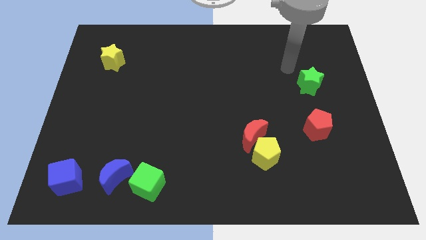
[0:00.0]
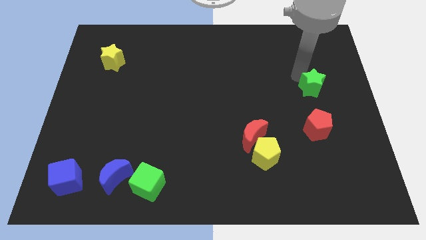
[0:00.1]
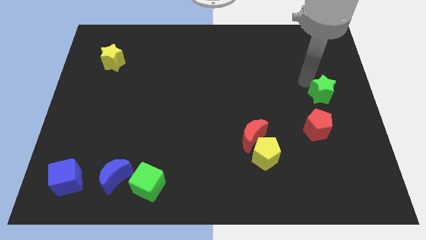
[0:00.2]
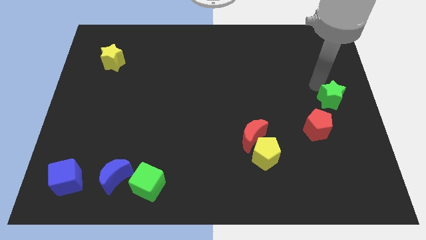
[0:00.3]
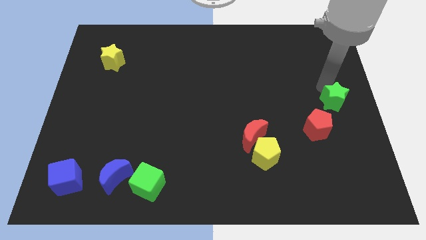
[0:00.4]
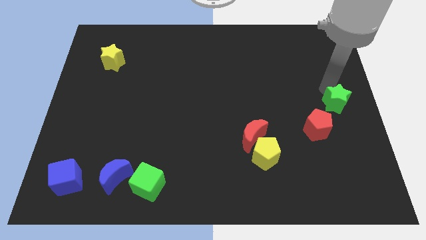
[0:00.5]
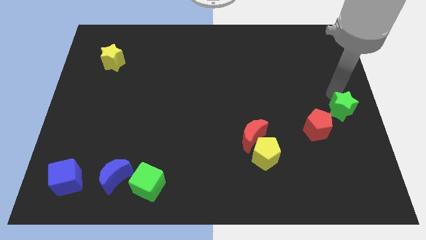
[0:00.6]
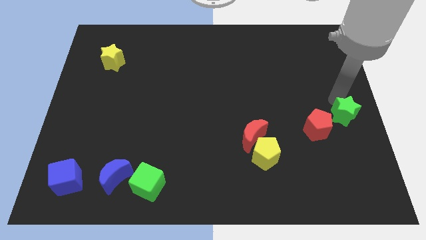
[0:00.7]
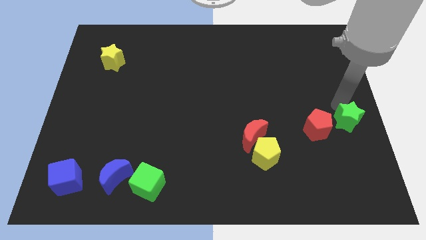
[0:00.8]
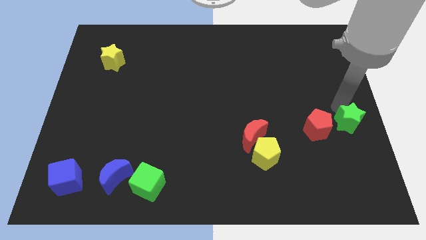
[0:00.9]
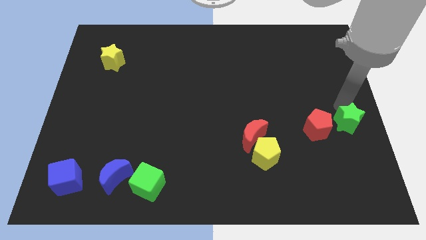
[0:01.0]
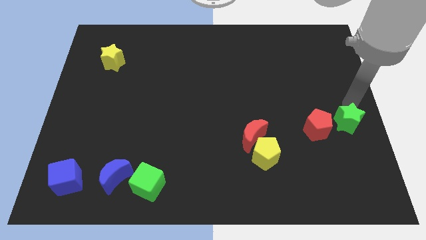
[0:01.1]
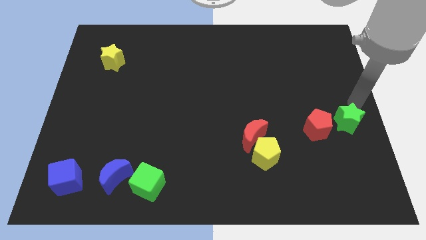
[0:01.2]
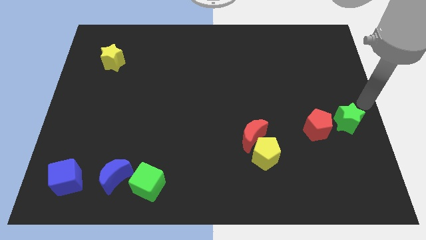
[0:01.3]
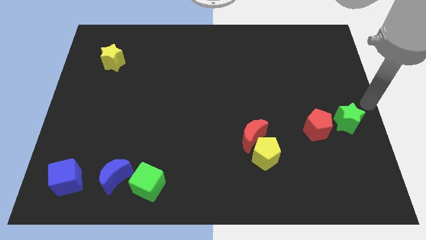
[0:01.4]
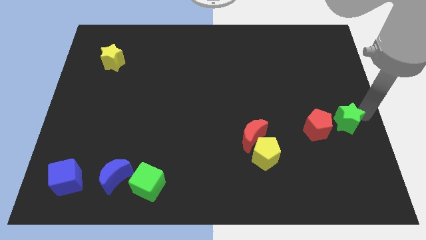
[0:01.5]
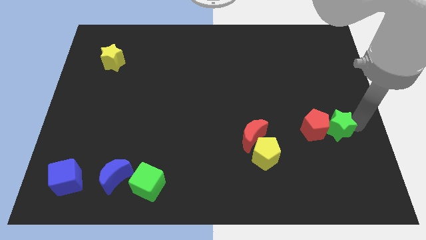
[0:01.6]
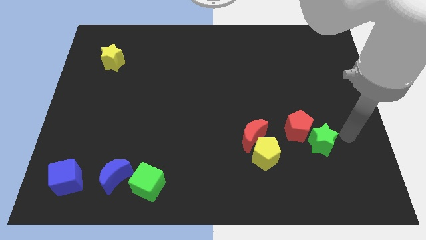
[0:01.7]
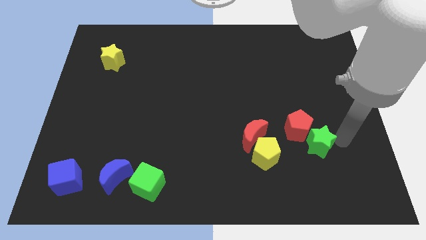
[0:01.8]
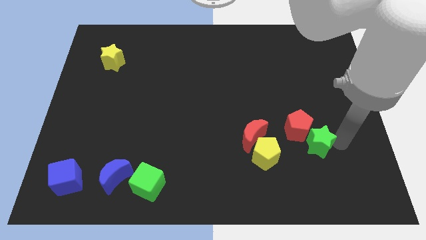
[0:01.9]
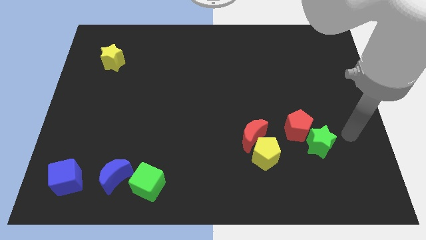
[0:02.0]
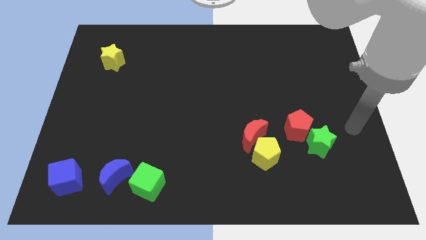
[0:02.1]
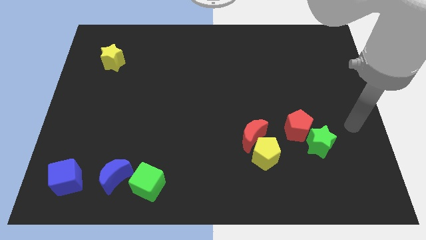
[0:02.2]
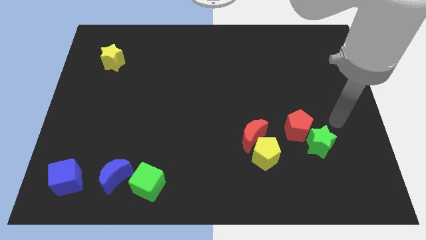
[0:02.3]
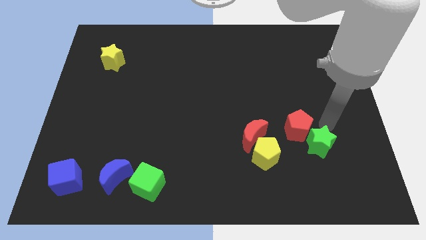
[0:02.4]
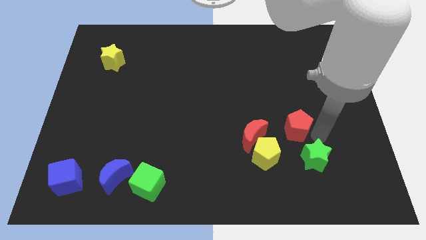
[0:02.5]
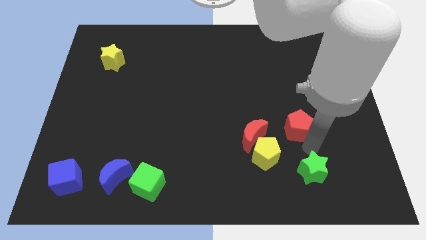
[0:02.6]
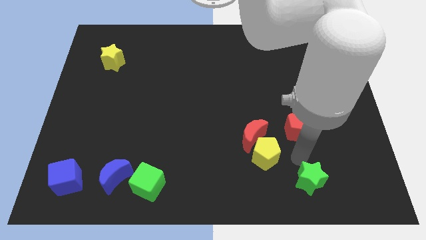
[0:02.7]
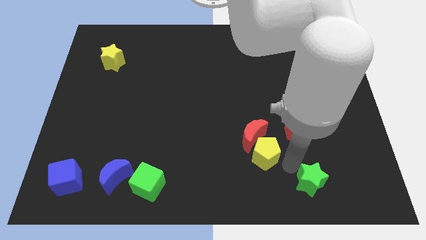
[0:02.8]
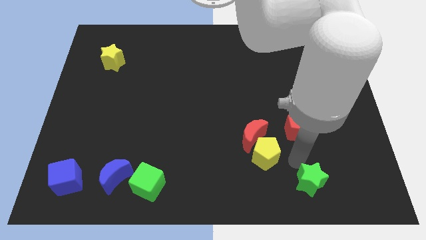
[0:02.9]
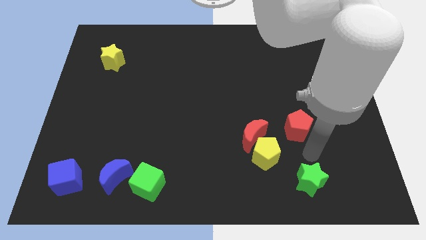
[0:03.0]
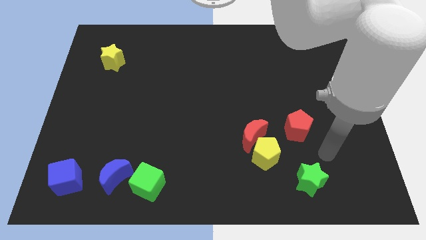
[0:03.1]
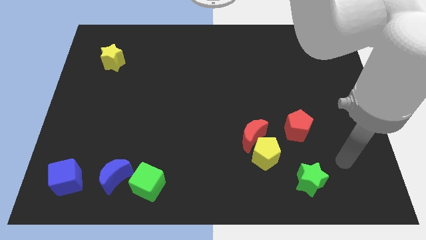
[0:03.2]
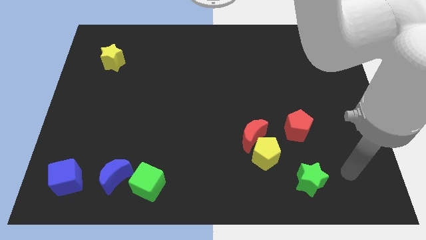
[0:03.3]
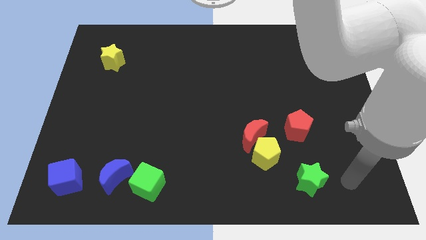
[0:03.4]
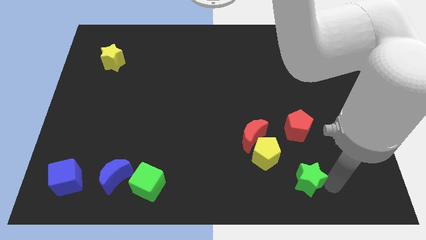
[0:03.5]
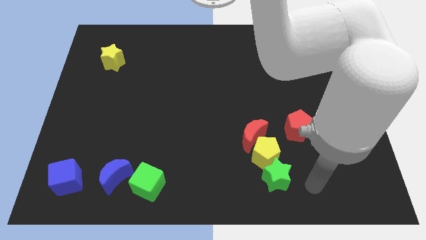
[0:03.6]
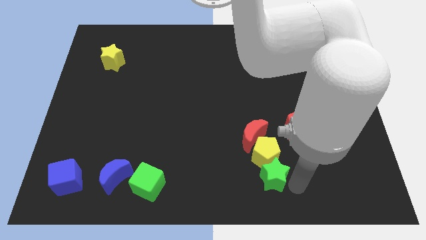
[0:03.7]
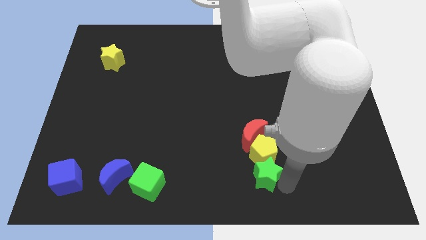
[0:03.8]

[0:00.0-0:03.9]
place the green star at the bottom of the yellow pentagon

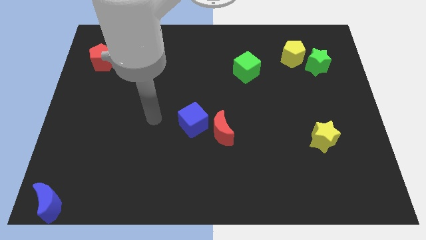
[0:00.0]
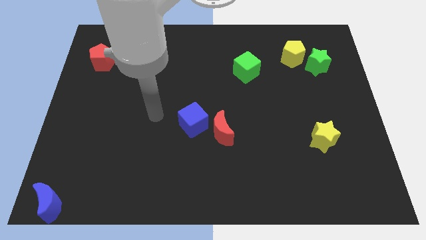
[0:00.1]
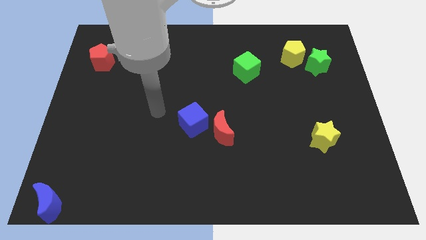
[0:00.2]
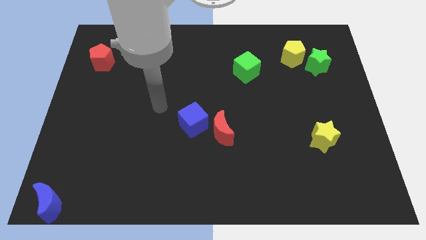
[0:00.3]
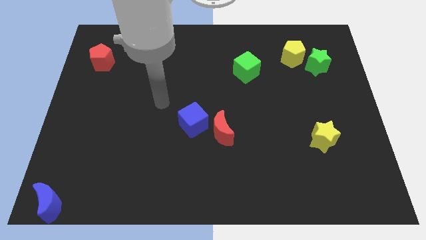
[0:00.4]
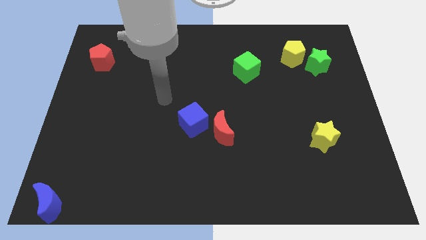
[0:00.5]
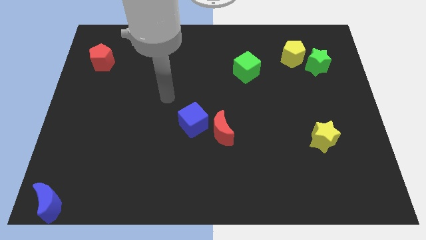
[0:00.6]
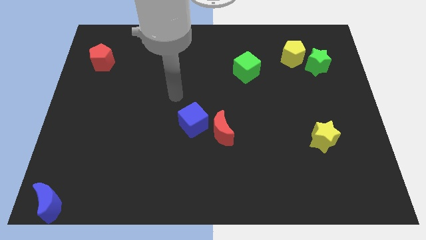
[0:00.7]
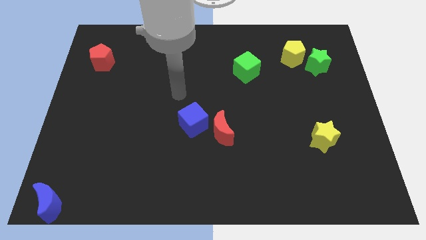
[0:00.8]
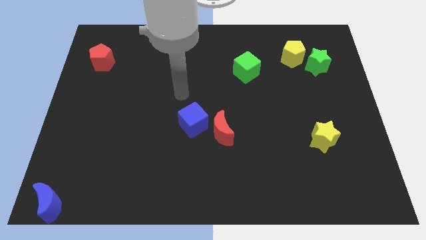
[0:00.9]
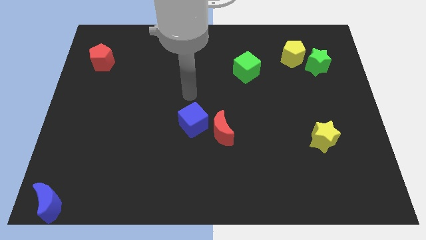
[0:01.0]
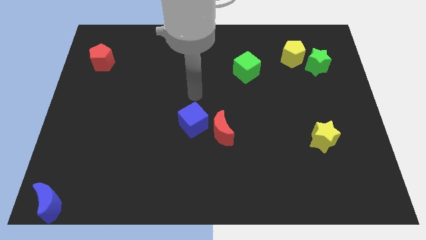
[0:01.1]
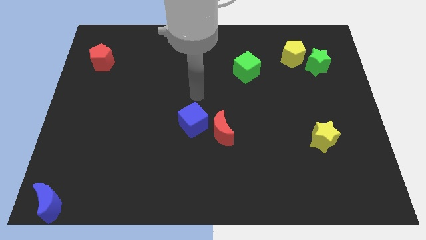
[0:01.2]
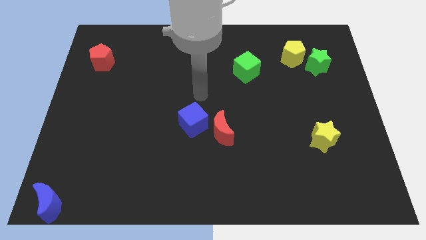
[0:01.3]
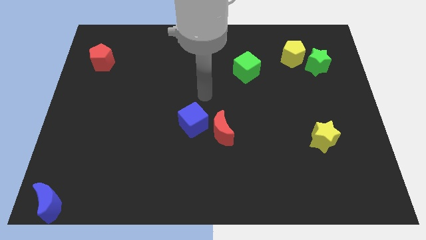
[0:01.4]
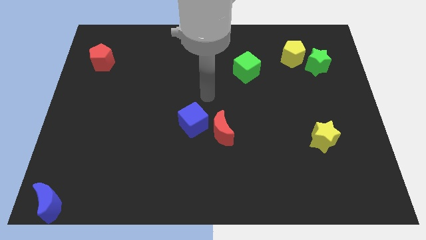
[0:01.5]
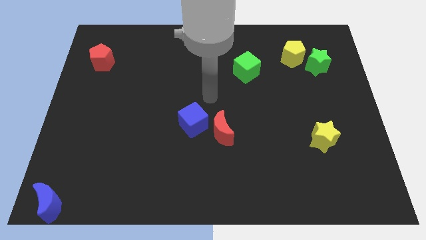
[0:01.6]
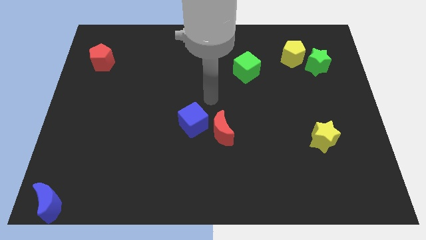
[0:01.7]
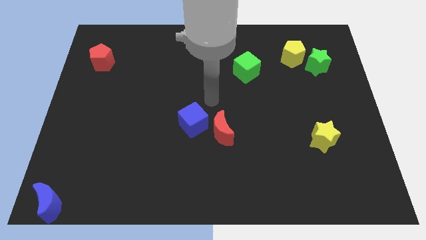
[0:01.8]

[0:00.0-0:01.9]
move your arm to the center of the board

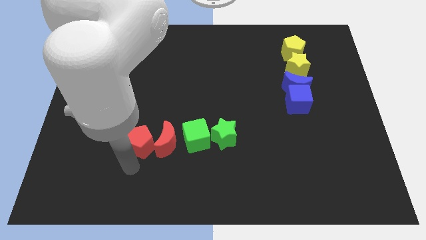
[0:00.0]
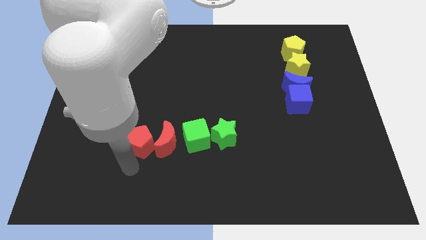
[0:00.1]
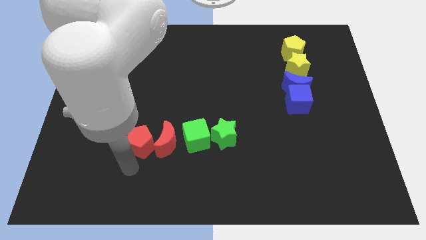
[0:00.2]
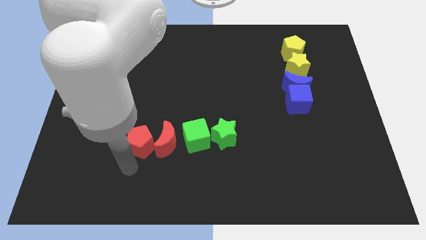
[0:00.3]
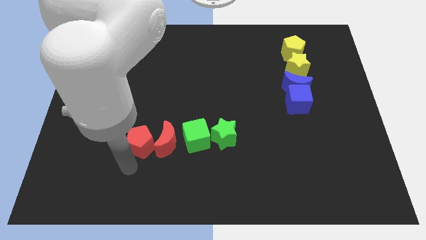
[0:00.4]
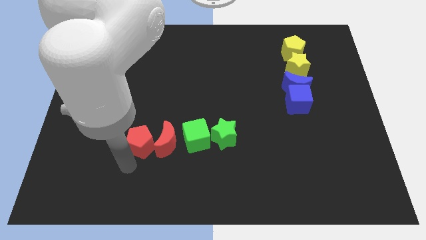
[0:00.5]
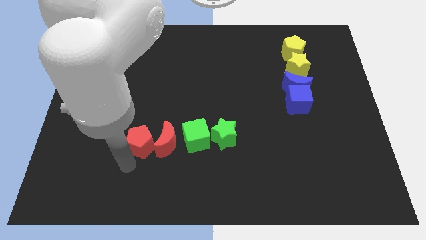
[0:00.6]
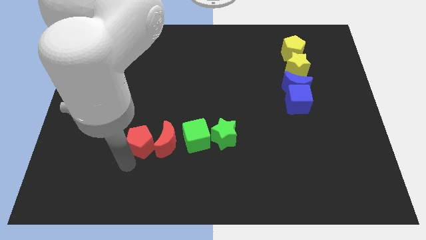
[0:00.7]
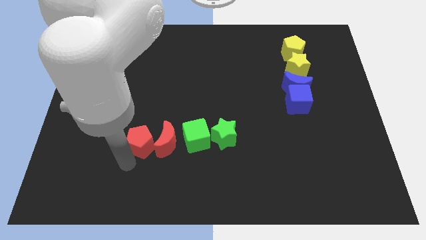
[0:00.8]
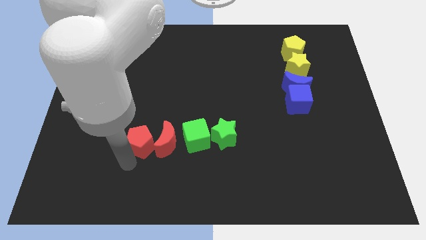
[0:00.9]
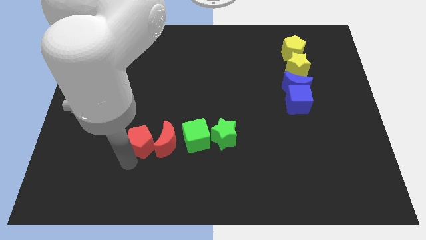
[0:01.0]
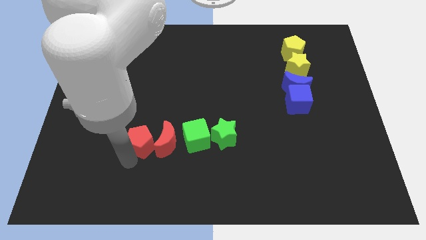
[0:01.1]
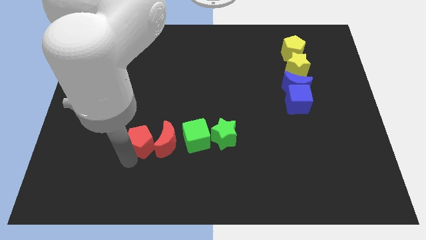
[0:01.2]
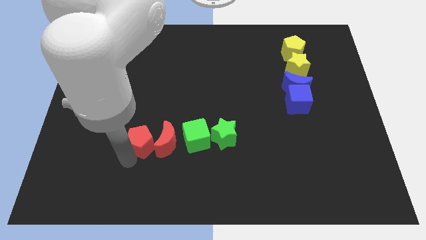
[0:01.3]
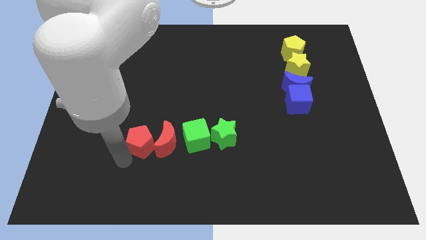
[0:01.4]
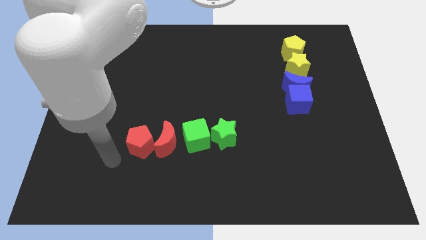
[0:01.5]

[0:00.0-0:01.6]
move the red pentagon towards the left side of the red moon

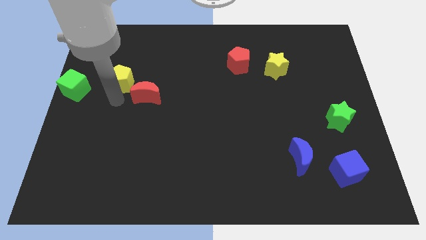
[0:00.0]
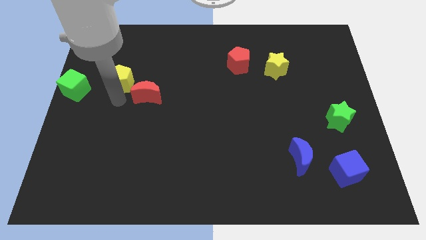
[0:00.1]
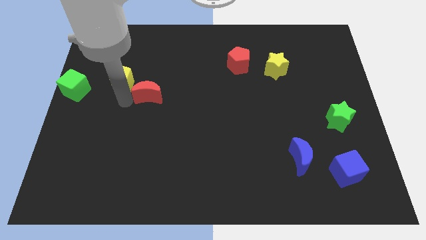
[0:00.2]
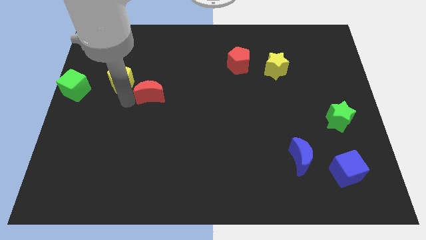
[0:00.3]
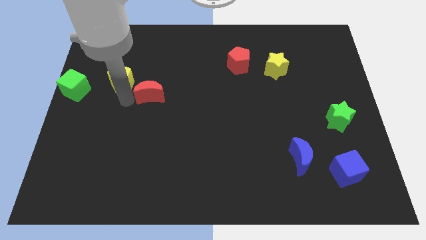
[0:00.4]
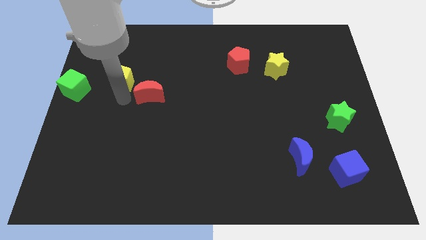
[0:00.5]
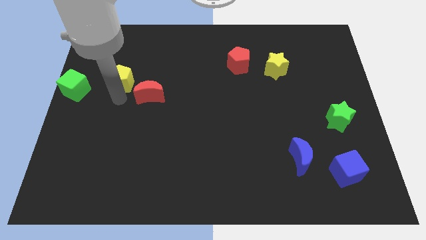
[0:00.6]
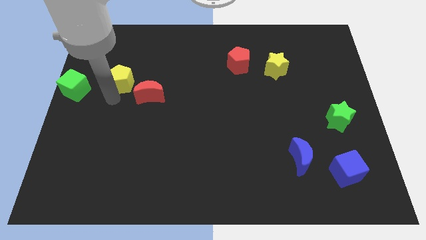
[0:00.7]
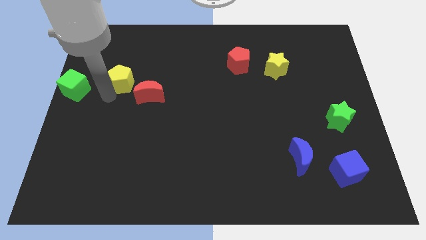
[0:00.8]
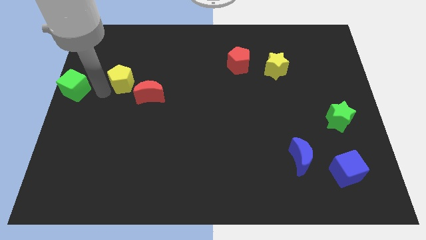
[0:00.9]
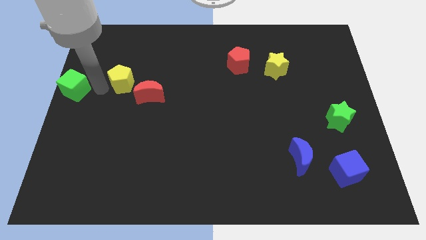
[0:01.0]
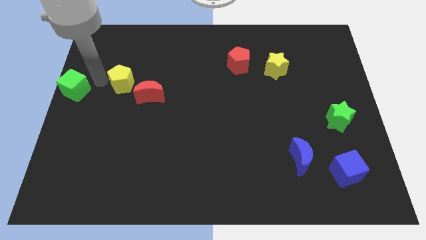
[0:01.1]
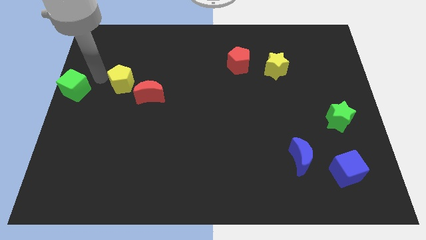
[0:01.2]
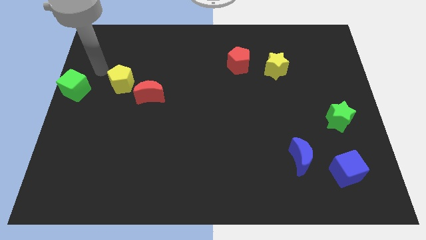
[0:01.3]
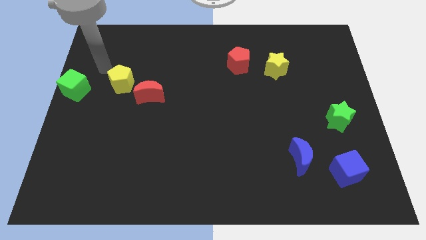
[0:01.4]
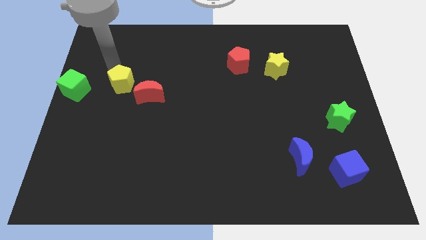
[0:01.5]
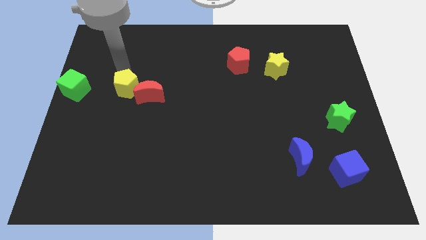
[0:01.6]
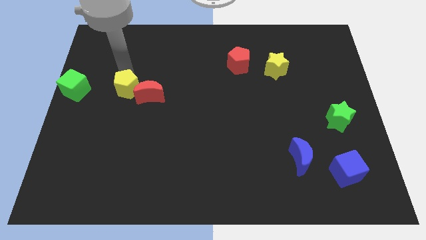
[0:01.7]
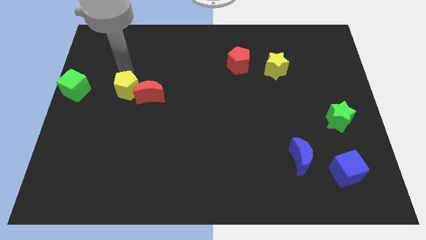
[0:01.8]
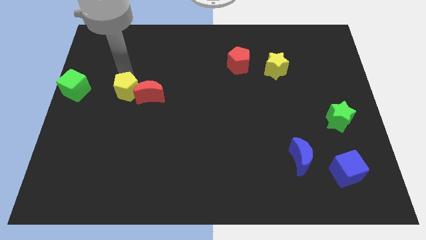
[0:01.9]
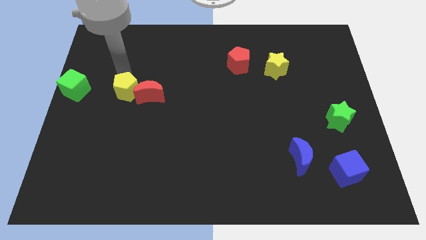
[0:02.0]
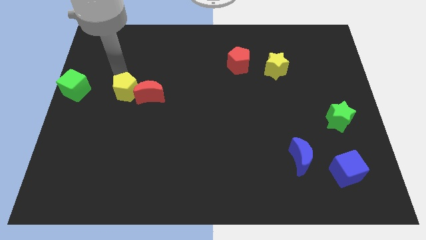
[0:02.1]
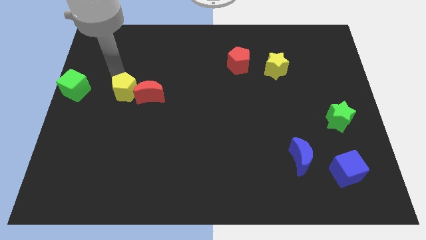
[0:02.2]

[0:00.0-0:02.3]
push the yellow pentagon to the top left of red crescent
